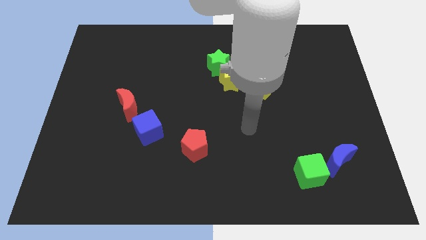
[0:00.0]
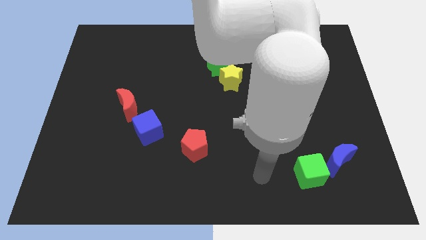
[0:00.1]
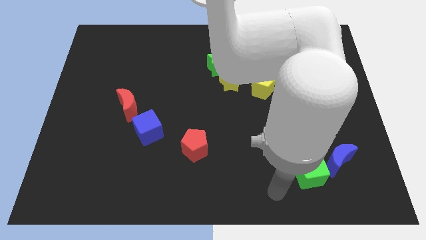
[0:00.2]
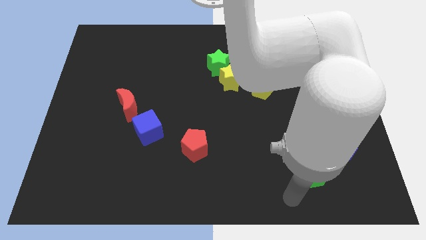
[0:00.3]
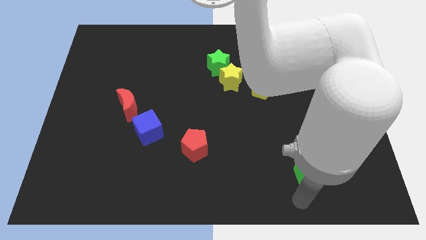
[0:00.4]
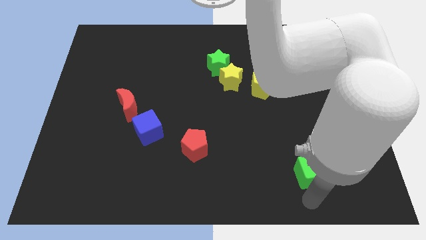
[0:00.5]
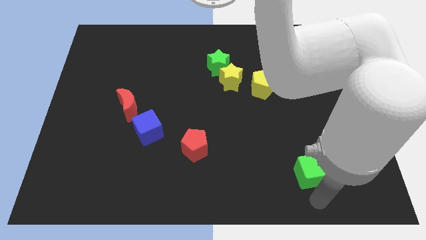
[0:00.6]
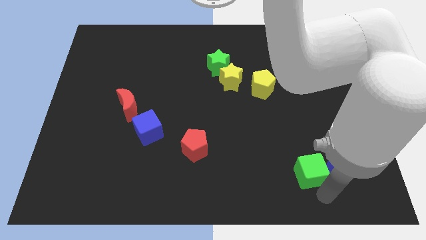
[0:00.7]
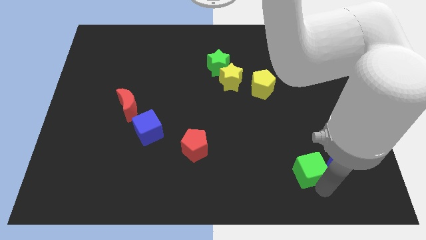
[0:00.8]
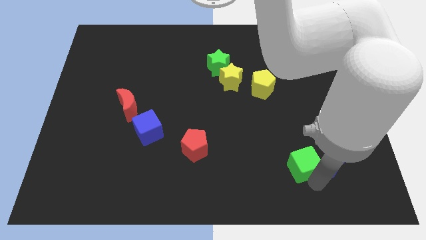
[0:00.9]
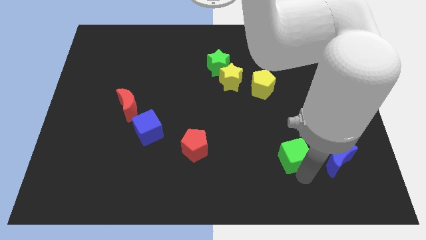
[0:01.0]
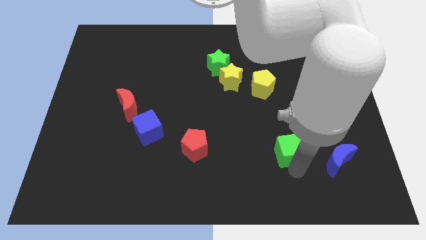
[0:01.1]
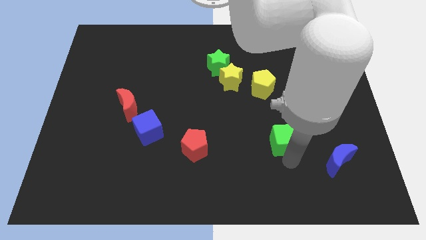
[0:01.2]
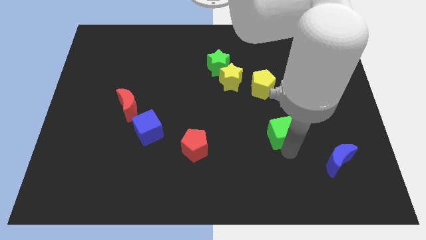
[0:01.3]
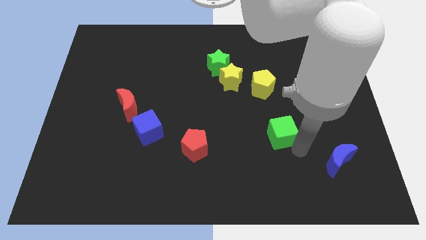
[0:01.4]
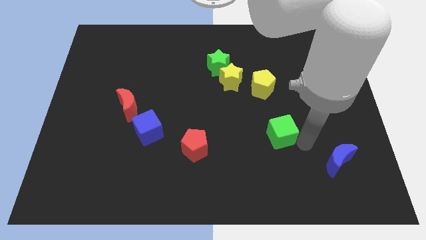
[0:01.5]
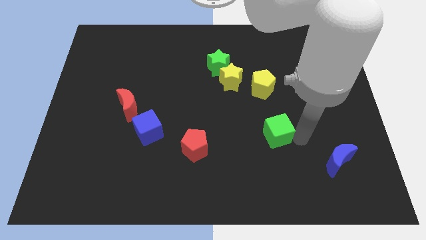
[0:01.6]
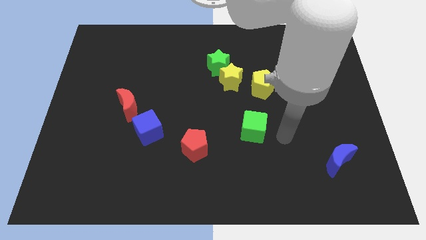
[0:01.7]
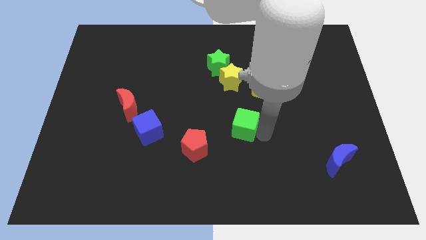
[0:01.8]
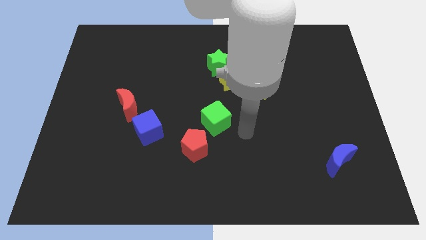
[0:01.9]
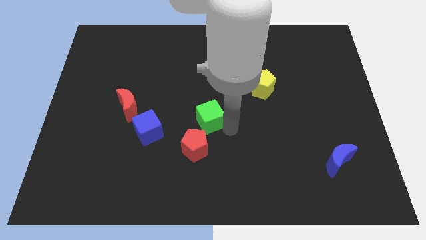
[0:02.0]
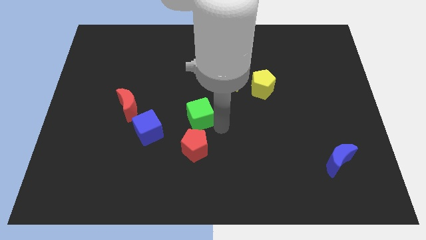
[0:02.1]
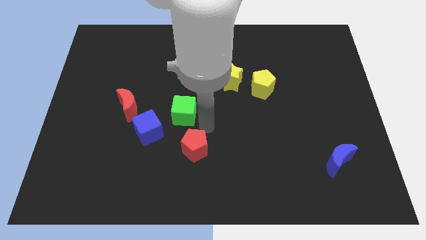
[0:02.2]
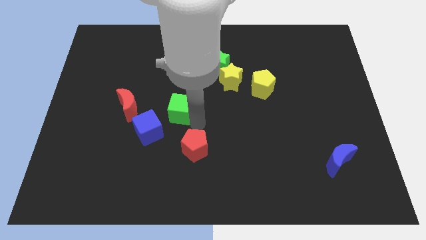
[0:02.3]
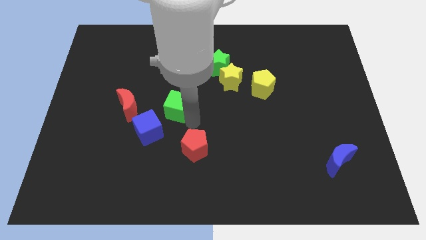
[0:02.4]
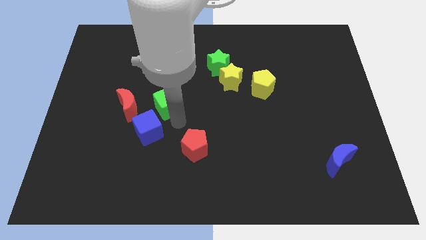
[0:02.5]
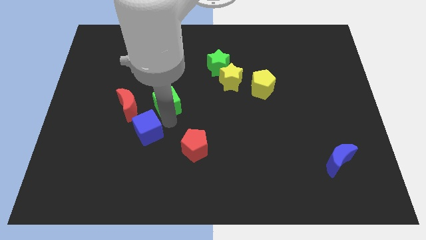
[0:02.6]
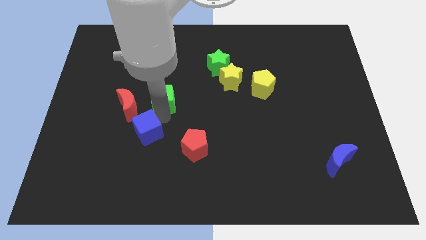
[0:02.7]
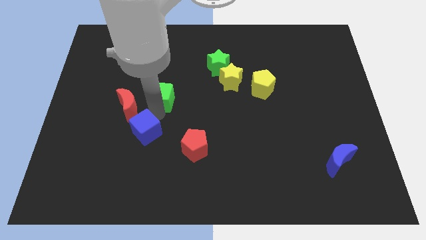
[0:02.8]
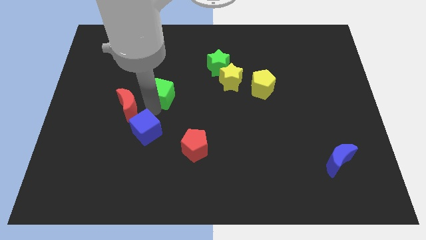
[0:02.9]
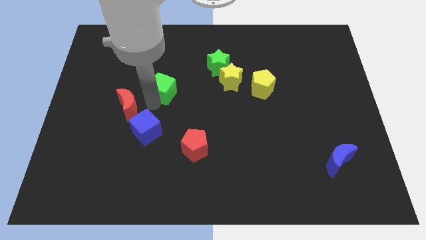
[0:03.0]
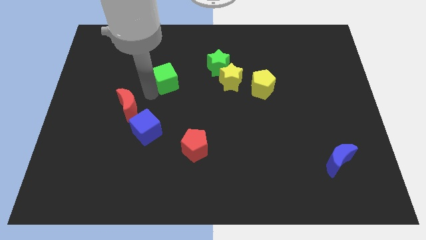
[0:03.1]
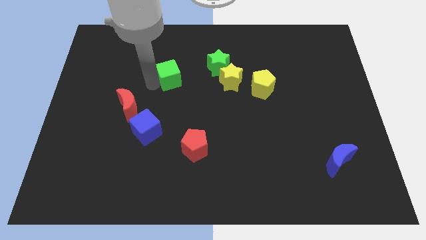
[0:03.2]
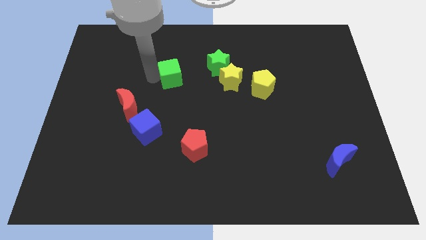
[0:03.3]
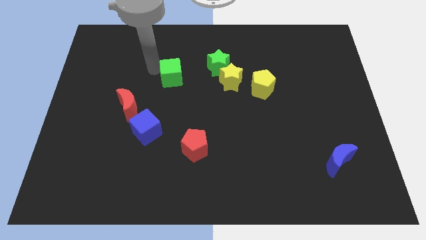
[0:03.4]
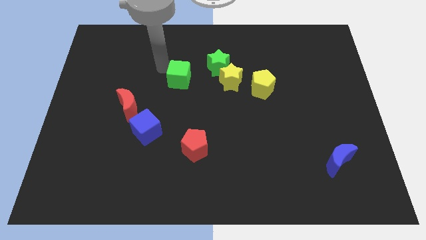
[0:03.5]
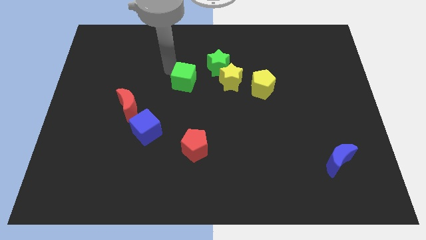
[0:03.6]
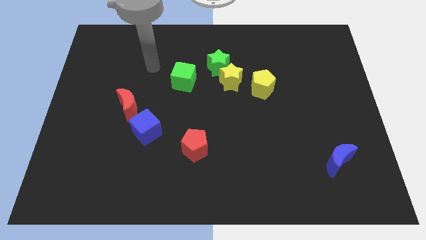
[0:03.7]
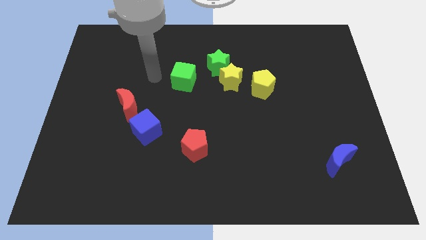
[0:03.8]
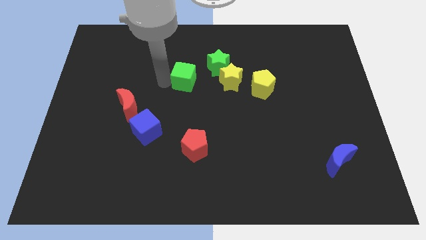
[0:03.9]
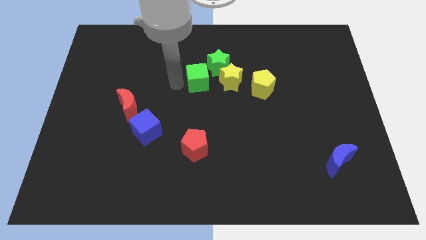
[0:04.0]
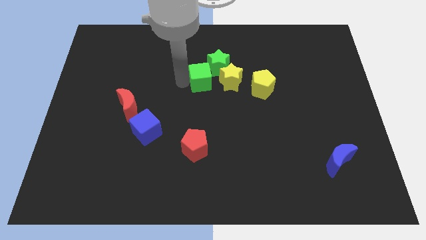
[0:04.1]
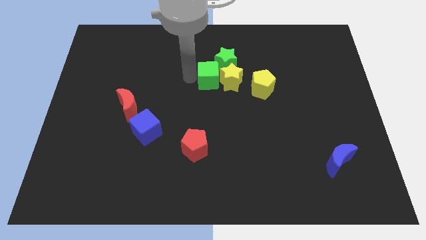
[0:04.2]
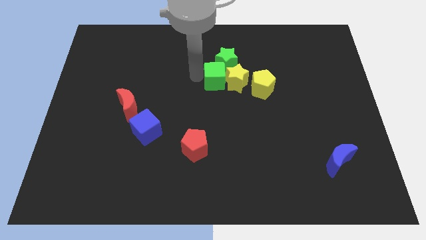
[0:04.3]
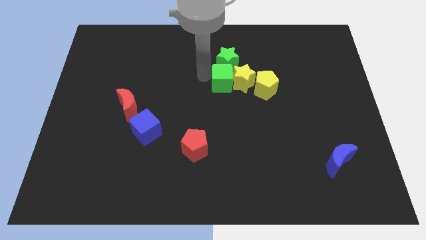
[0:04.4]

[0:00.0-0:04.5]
move the green cube towards the green star

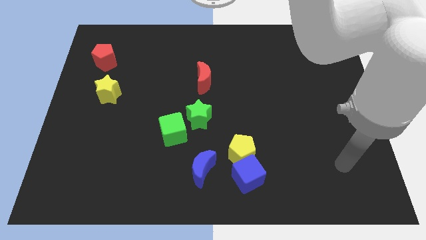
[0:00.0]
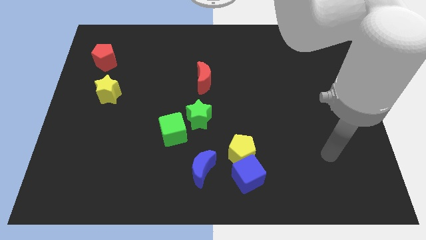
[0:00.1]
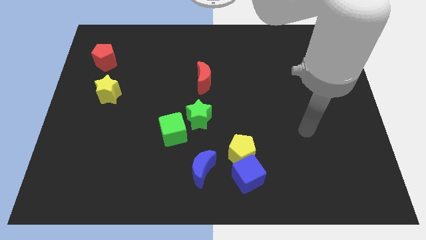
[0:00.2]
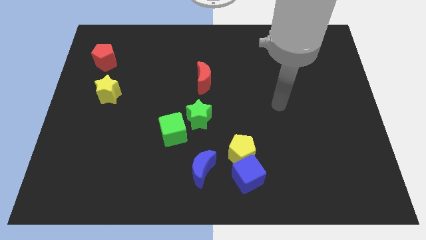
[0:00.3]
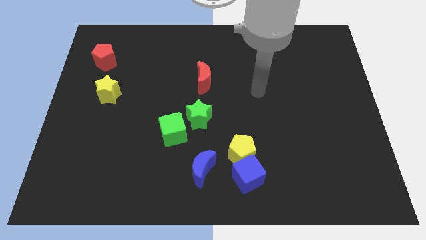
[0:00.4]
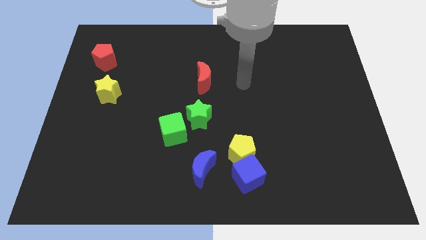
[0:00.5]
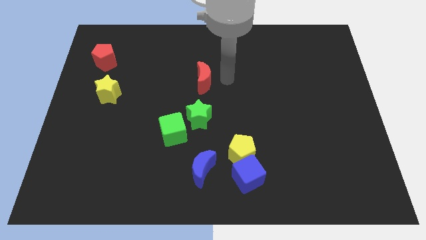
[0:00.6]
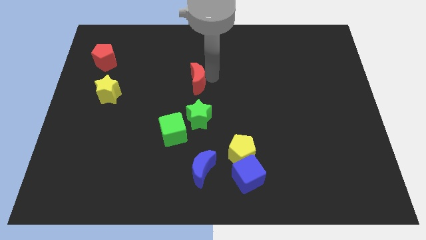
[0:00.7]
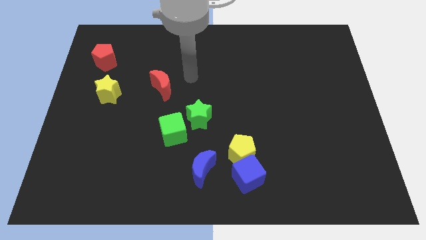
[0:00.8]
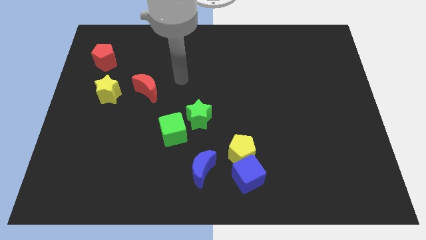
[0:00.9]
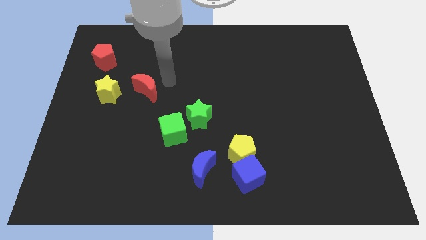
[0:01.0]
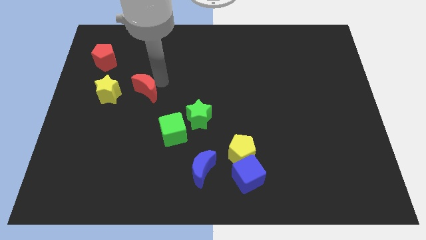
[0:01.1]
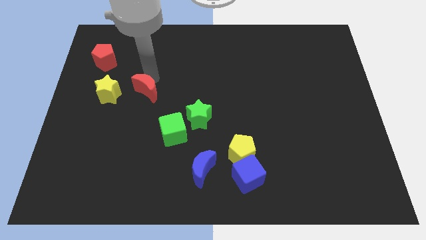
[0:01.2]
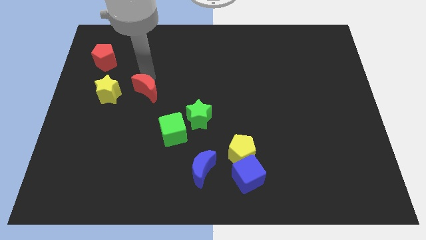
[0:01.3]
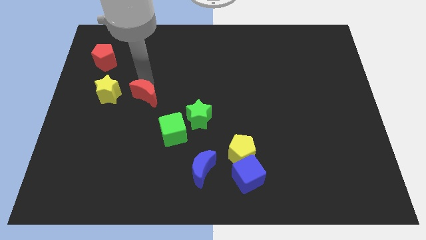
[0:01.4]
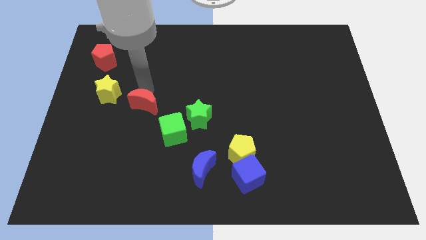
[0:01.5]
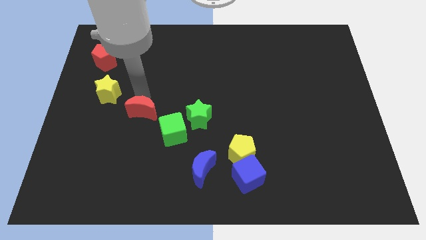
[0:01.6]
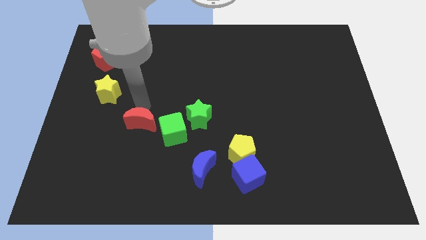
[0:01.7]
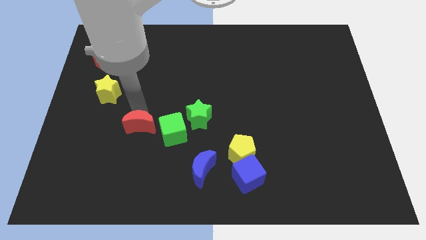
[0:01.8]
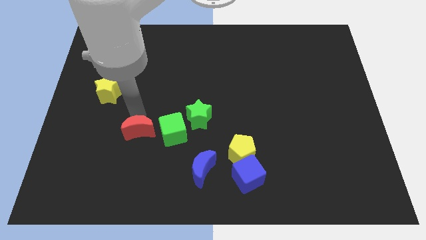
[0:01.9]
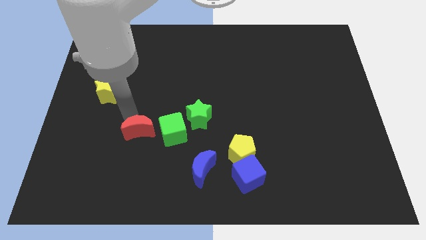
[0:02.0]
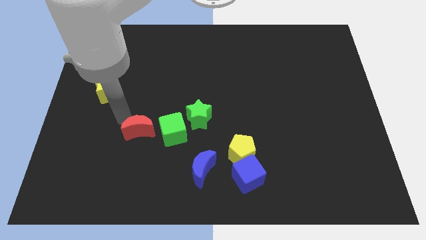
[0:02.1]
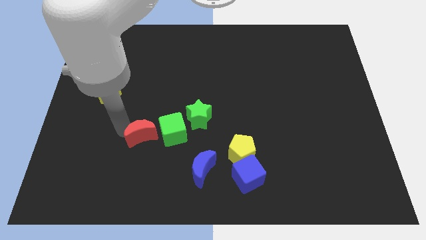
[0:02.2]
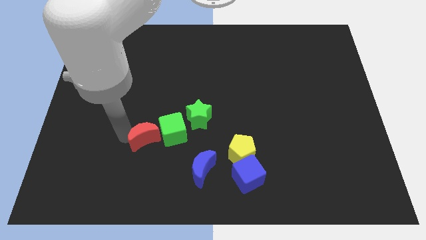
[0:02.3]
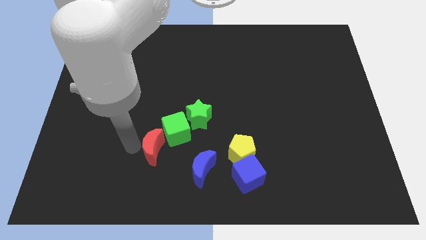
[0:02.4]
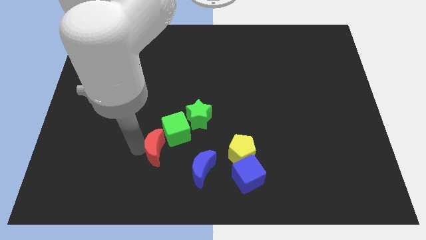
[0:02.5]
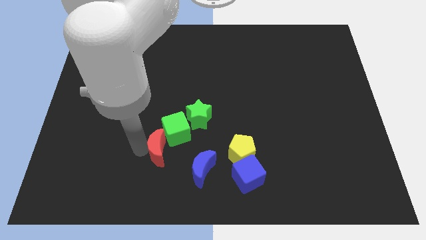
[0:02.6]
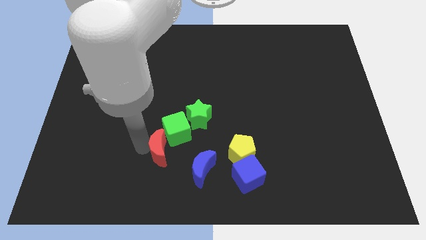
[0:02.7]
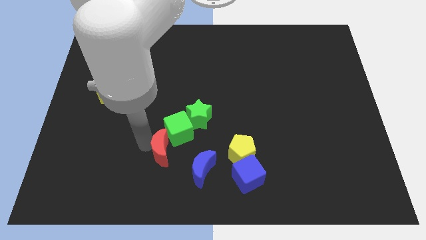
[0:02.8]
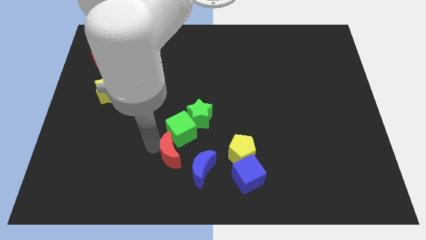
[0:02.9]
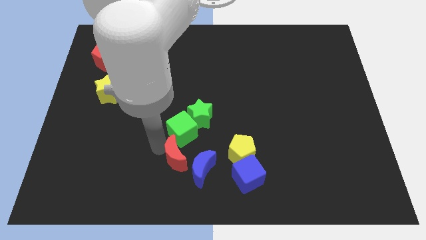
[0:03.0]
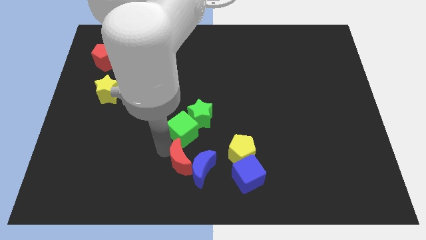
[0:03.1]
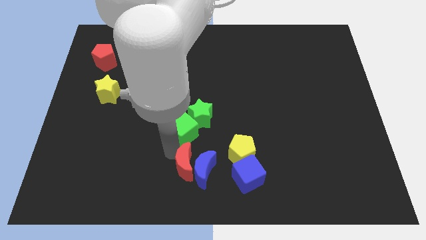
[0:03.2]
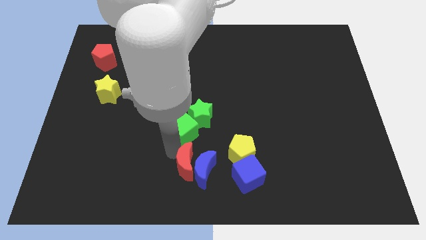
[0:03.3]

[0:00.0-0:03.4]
push the red moon to the blue moon

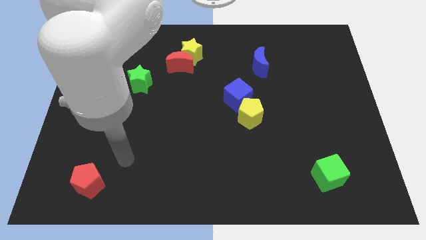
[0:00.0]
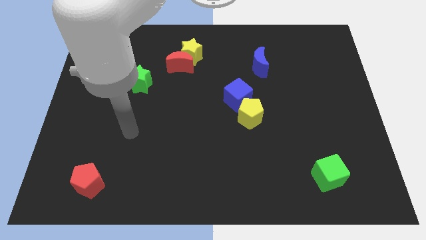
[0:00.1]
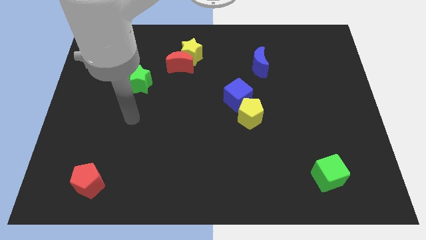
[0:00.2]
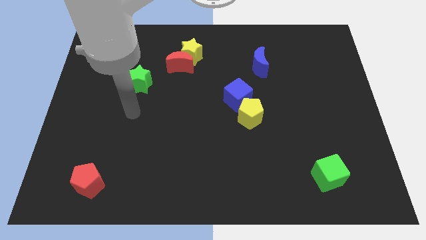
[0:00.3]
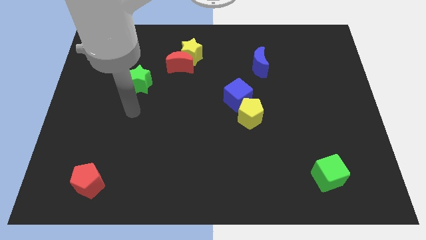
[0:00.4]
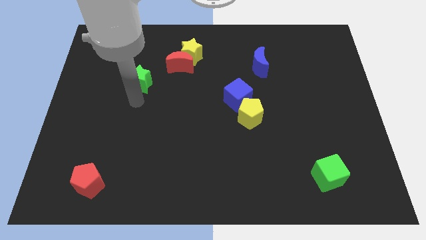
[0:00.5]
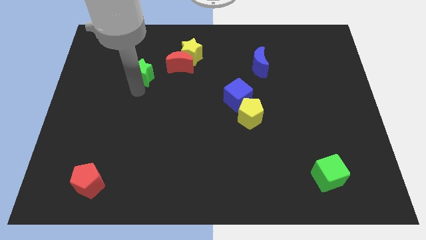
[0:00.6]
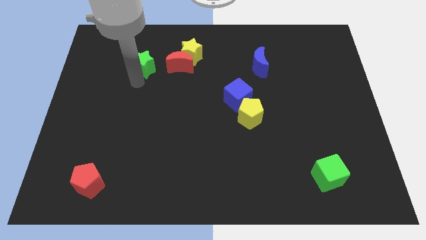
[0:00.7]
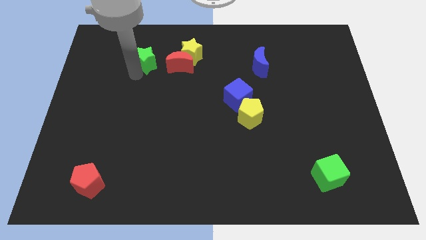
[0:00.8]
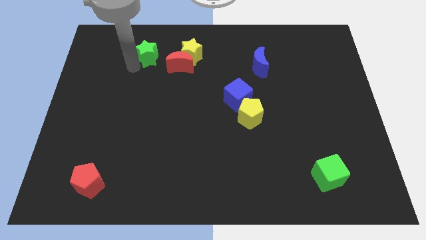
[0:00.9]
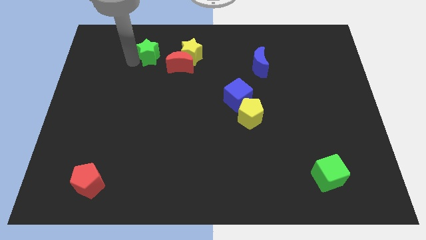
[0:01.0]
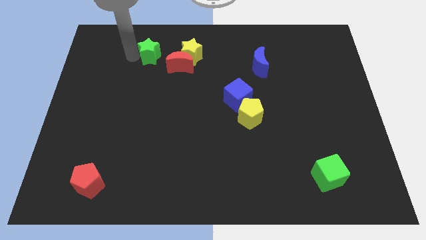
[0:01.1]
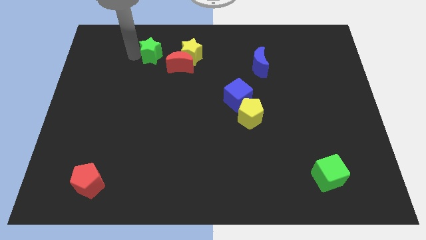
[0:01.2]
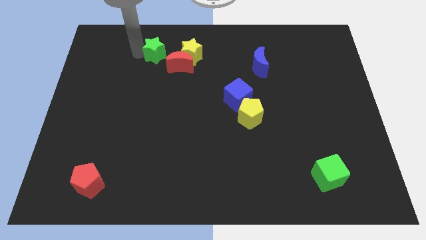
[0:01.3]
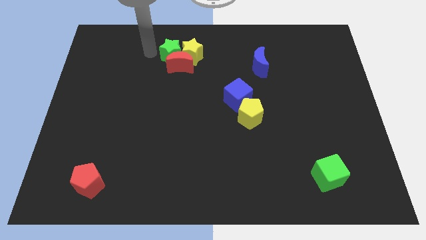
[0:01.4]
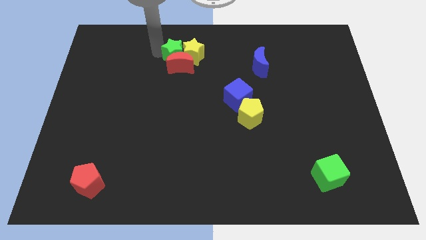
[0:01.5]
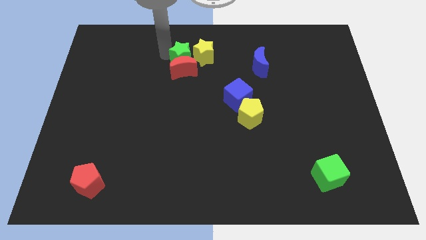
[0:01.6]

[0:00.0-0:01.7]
move the green star to the yellow star
